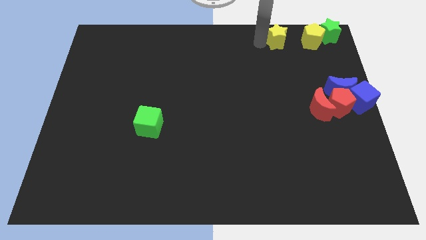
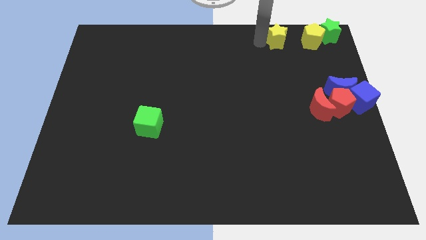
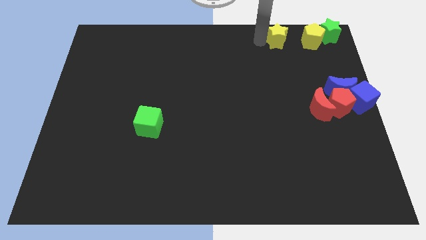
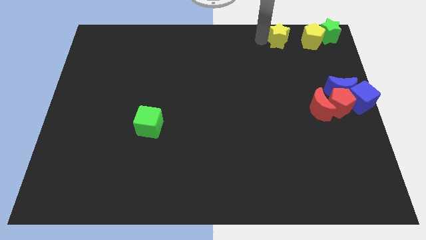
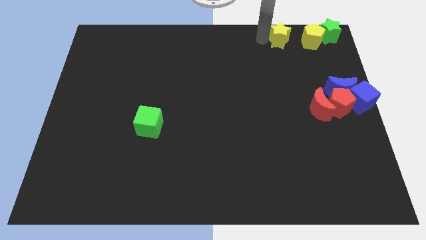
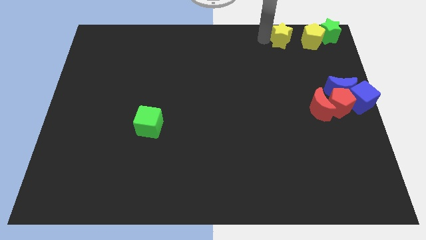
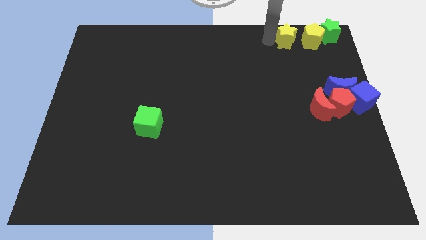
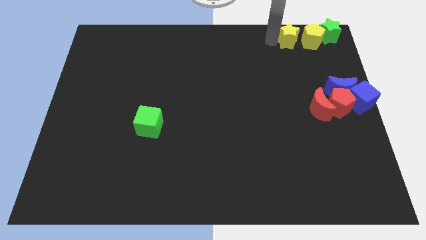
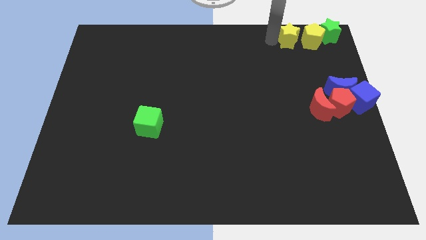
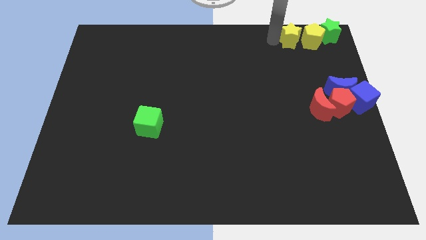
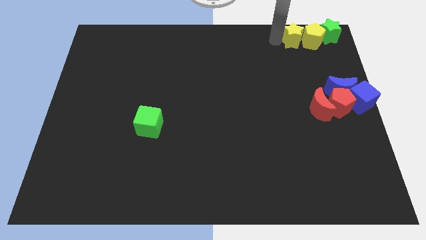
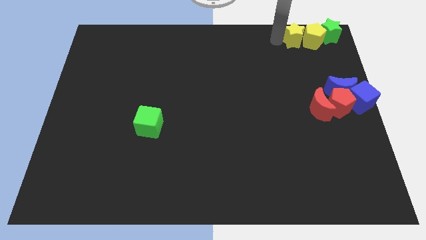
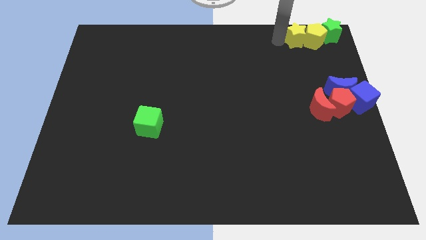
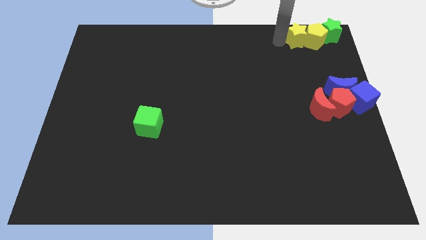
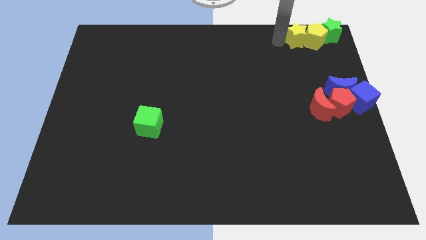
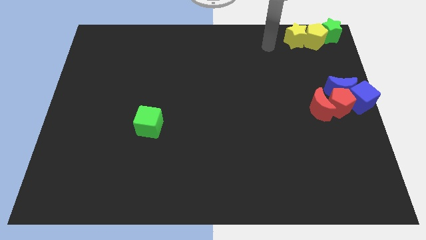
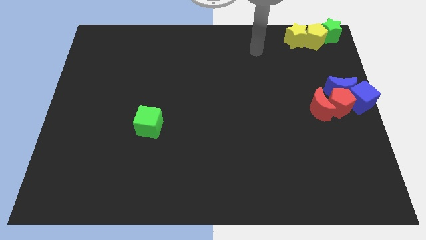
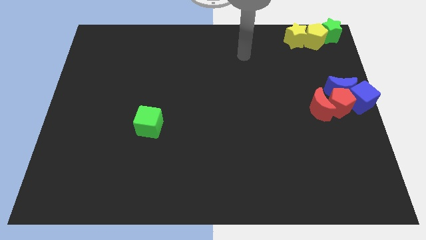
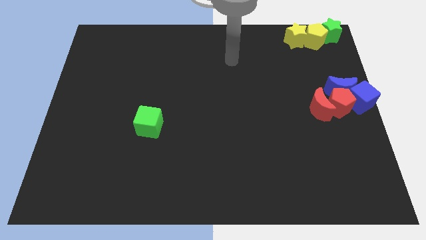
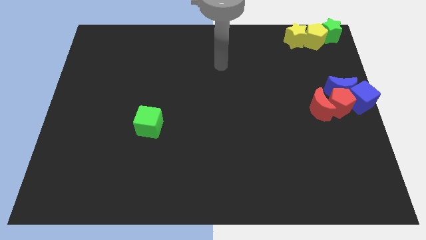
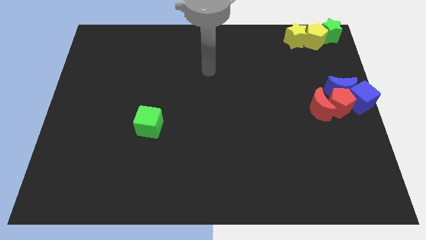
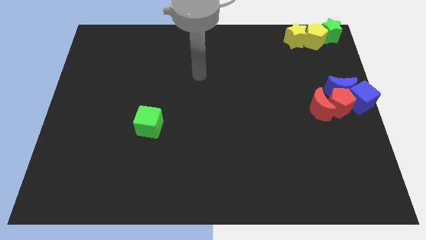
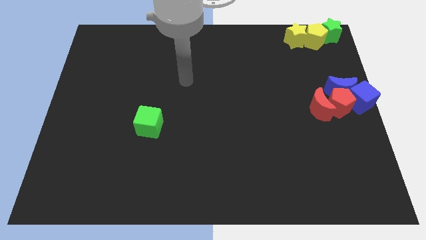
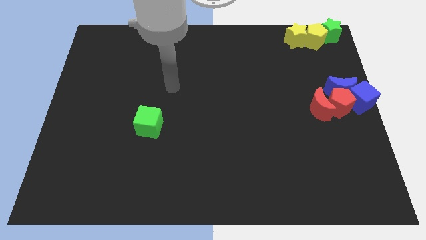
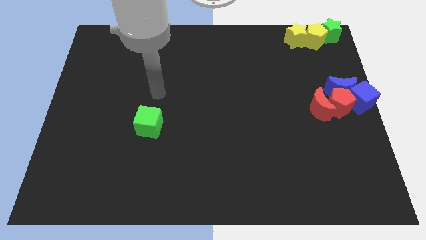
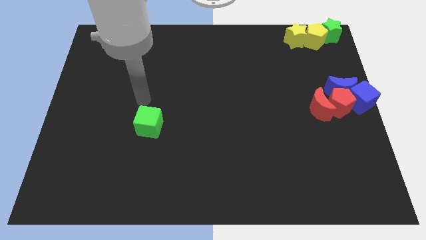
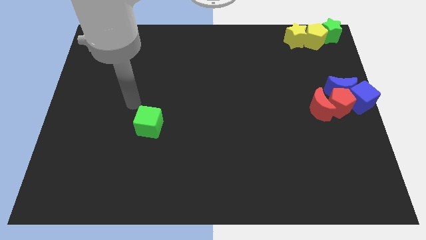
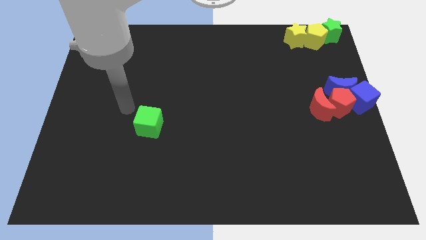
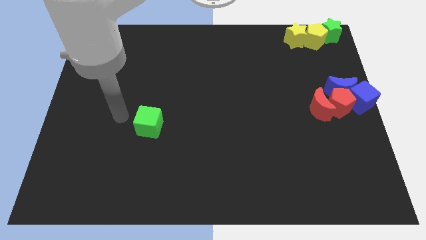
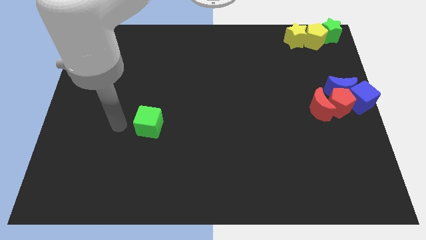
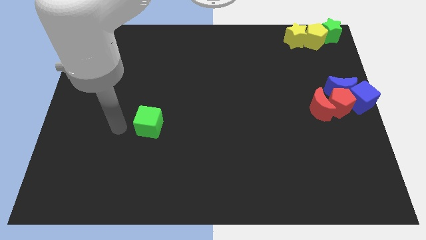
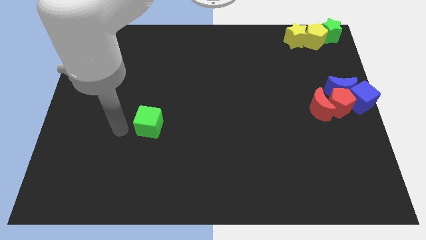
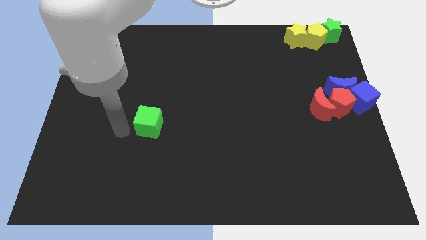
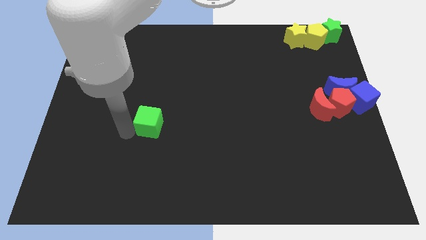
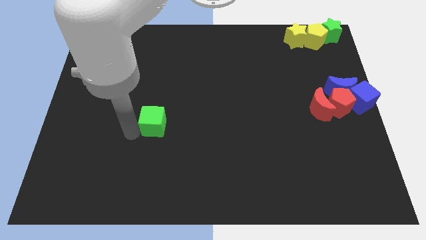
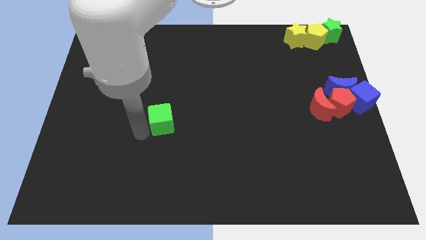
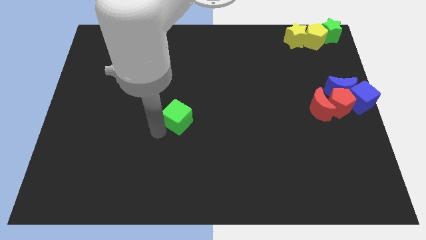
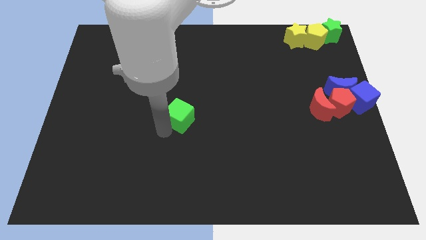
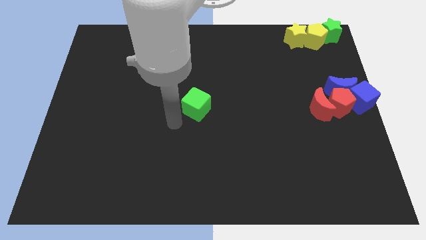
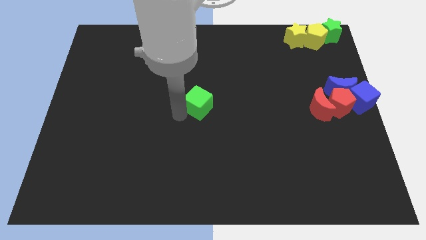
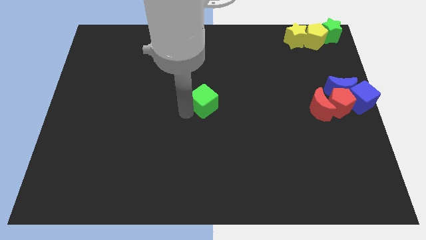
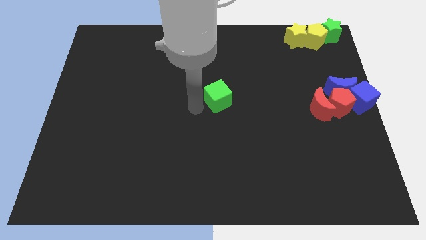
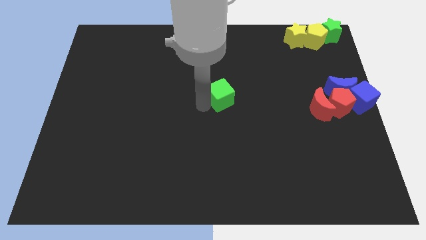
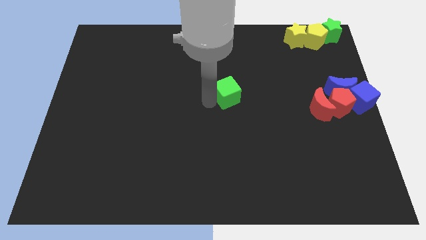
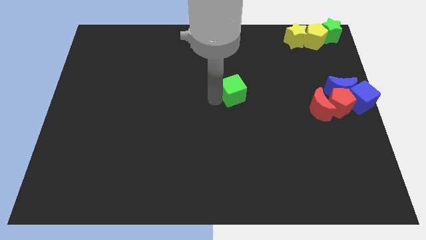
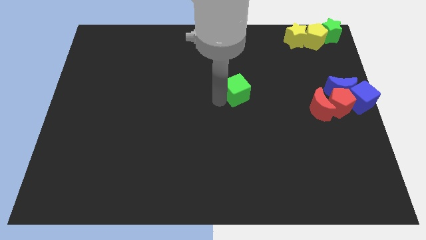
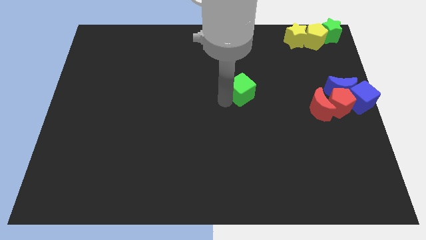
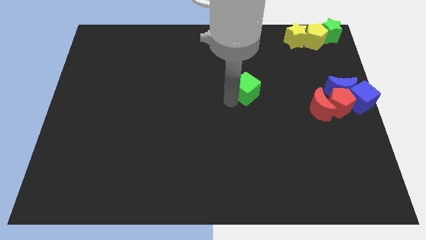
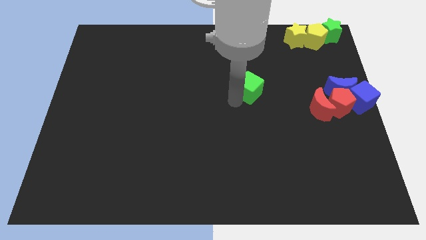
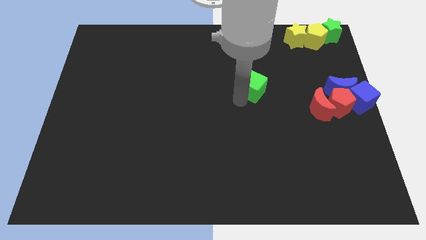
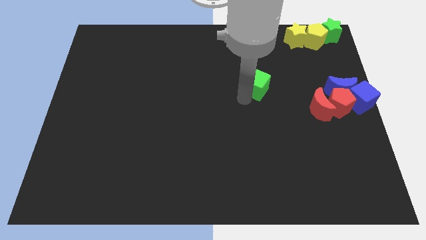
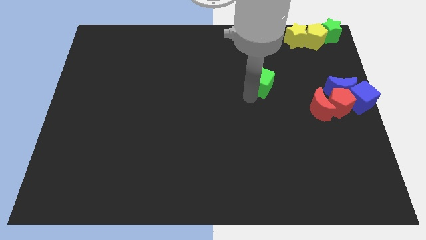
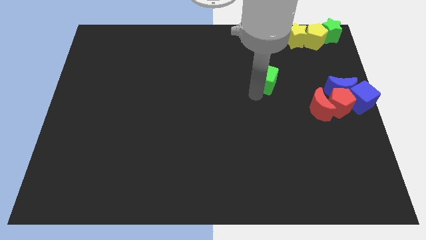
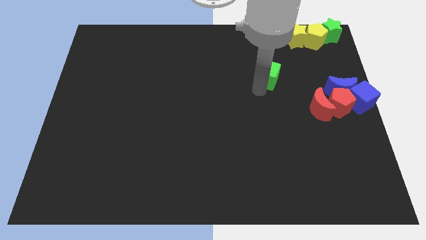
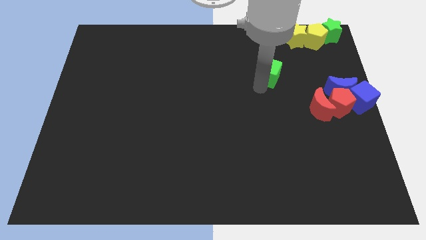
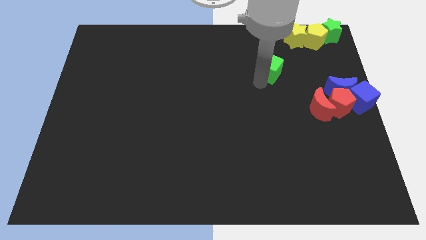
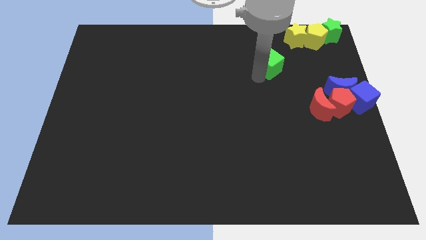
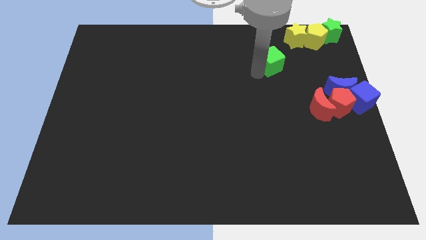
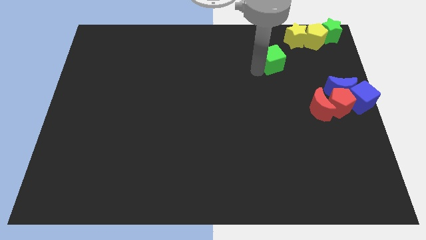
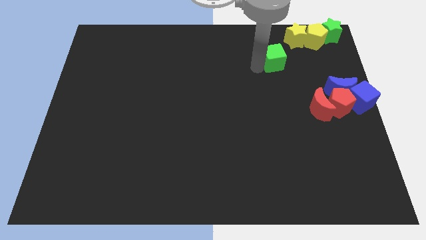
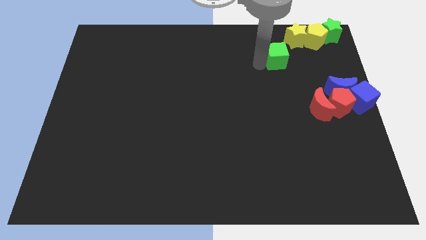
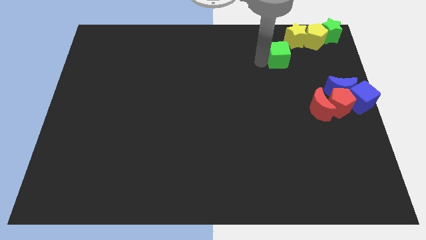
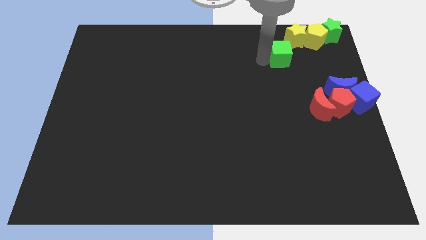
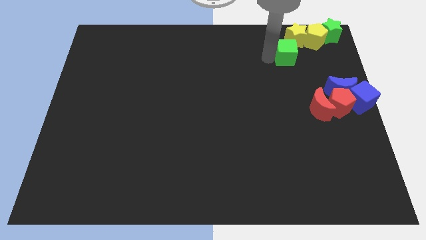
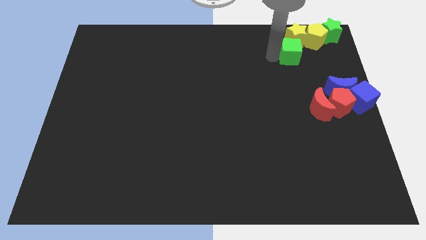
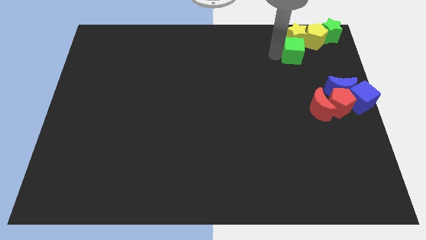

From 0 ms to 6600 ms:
move the green cube to the yellow star

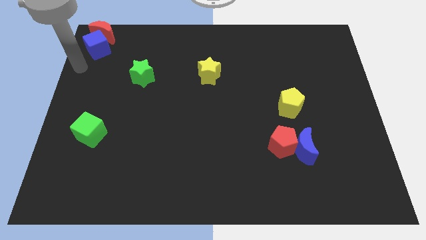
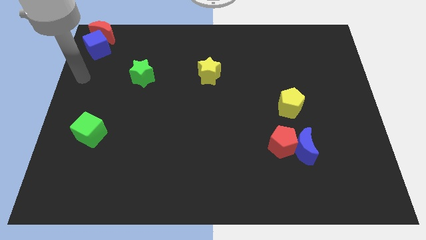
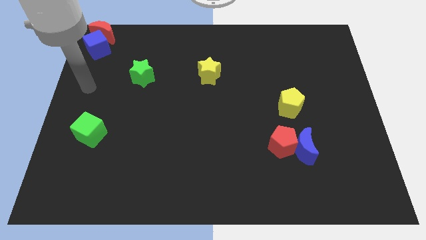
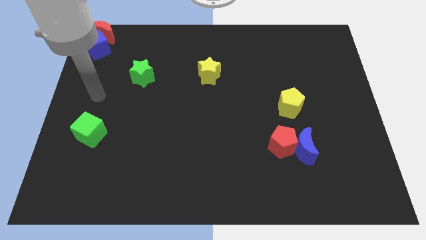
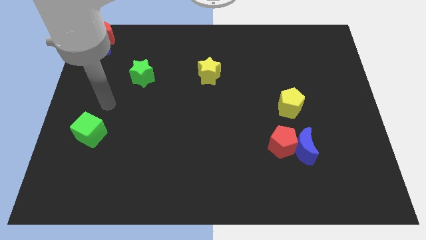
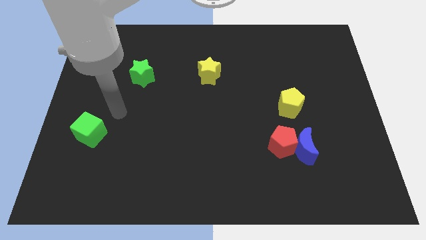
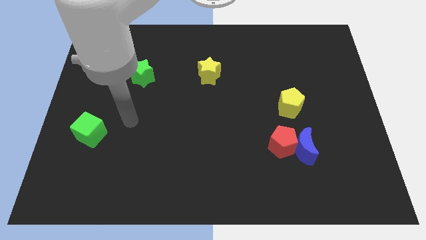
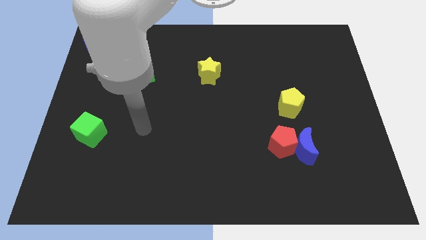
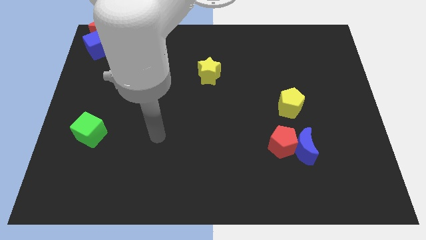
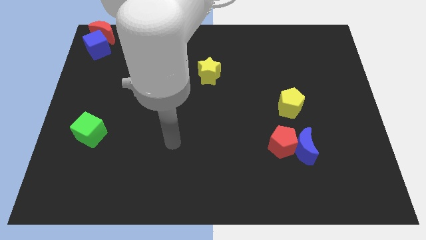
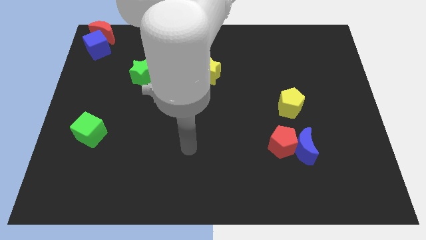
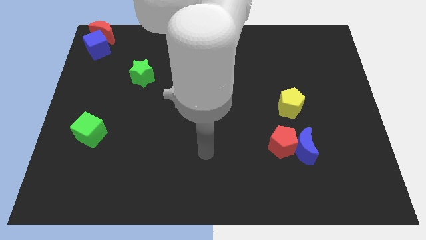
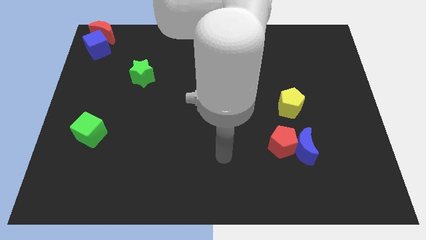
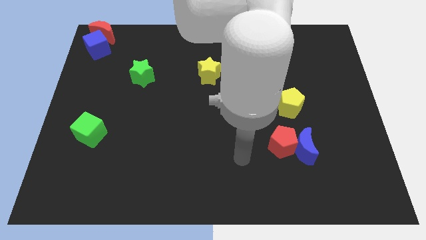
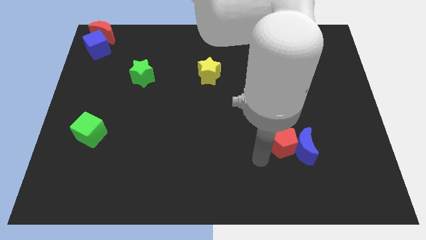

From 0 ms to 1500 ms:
move your hand towards red pentagon

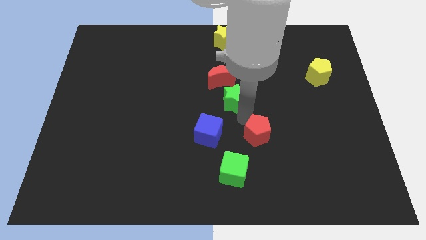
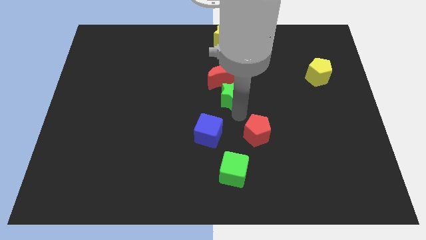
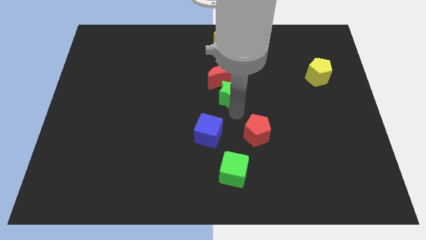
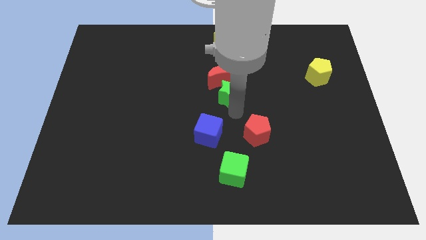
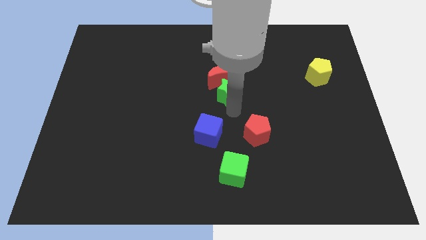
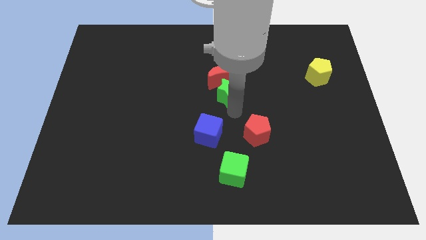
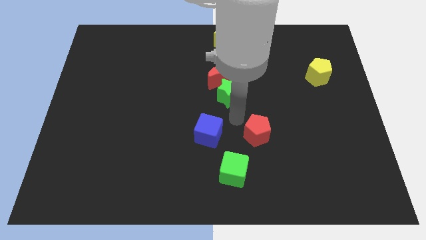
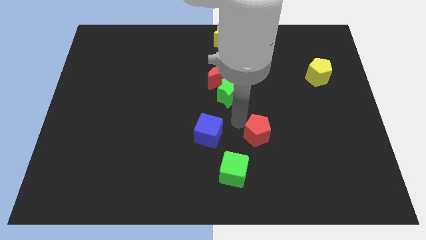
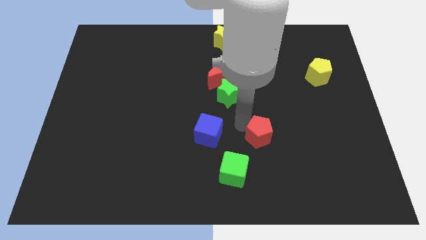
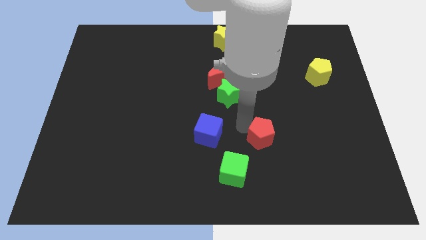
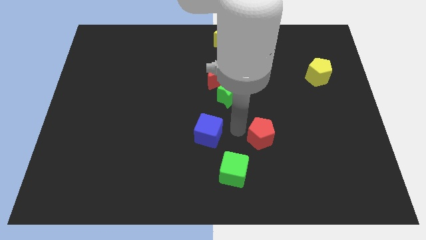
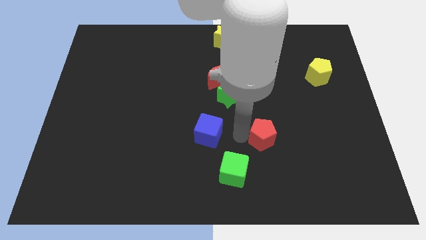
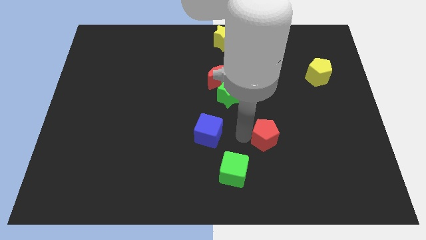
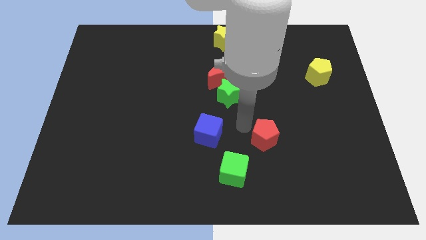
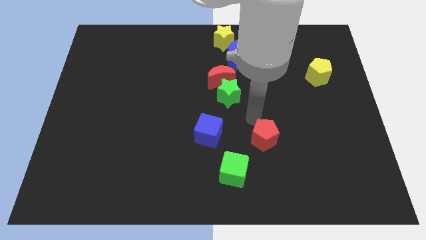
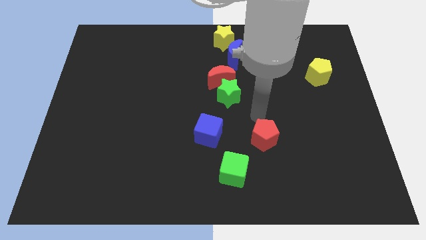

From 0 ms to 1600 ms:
slightly push red pentagon to the top right of the green cube
